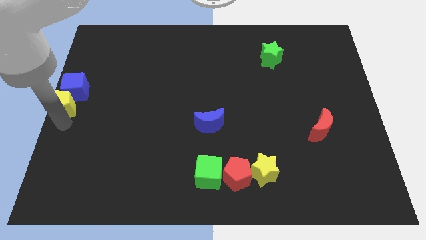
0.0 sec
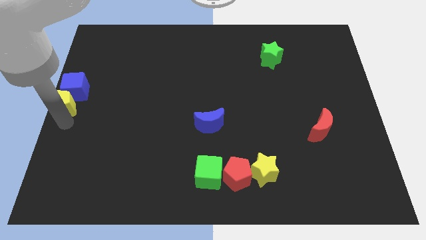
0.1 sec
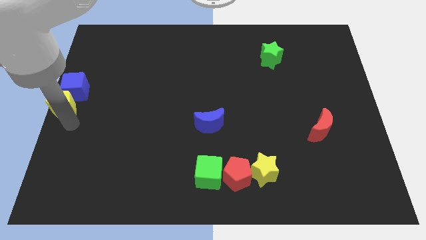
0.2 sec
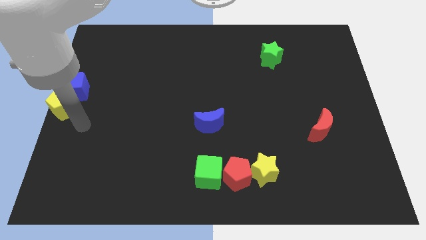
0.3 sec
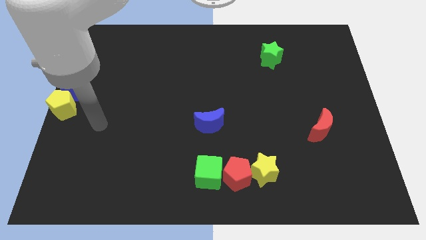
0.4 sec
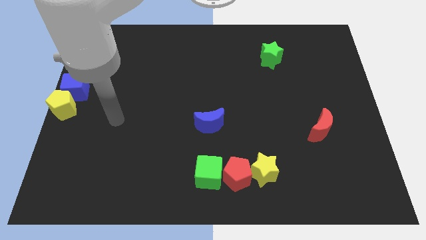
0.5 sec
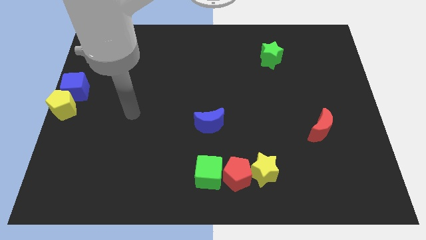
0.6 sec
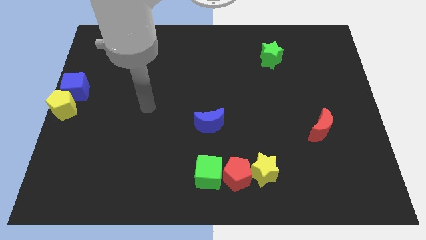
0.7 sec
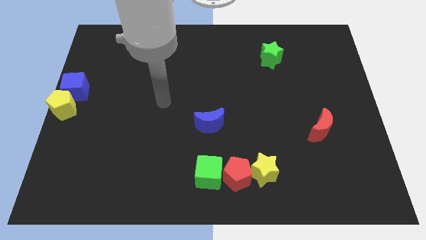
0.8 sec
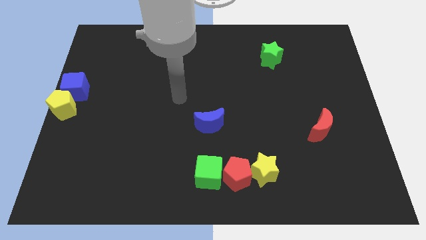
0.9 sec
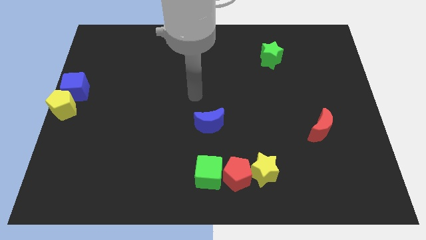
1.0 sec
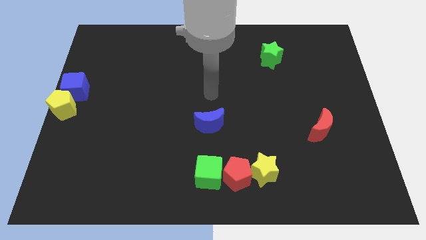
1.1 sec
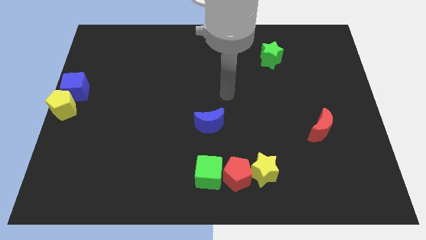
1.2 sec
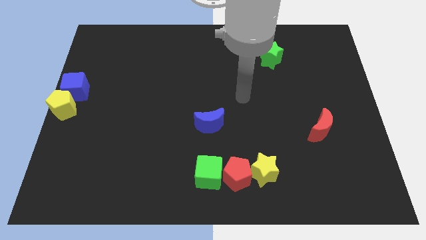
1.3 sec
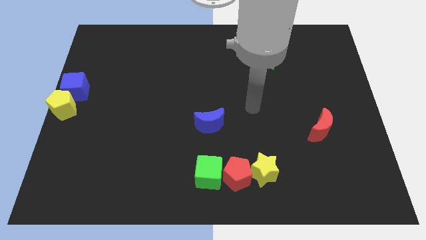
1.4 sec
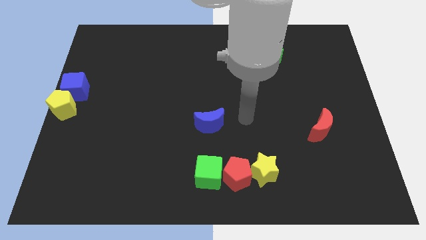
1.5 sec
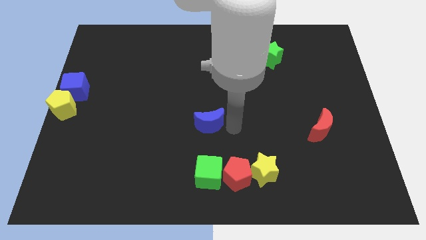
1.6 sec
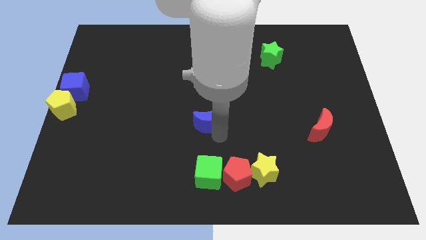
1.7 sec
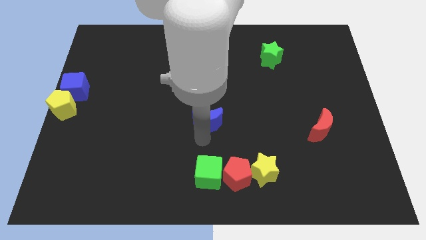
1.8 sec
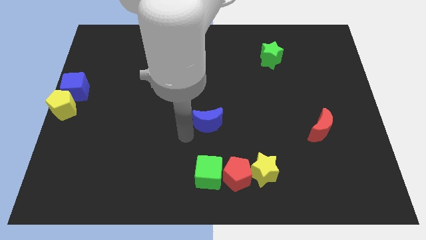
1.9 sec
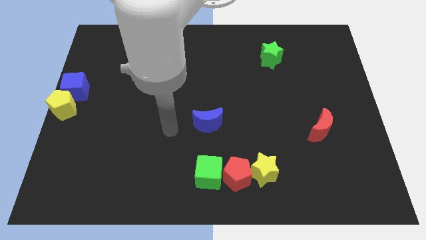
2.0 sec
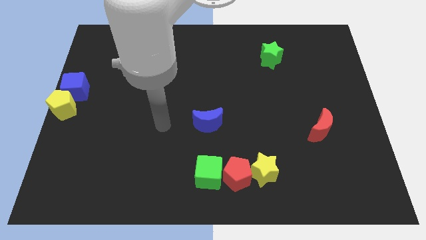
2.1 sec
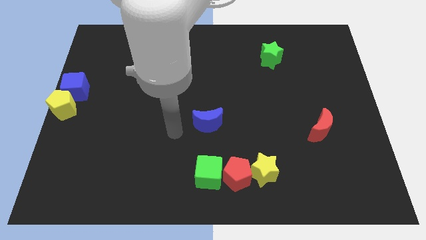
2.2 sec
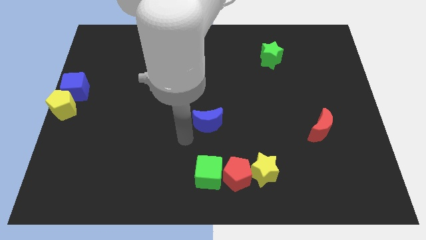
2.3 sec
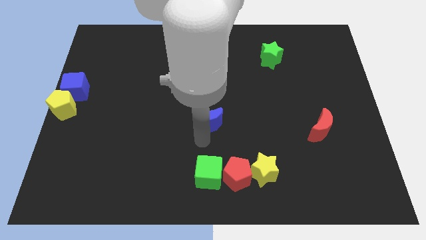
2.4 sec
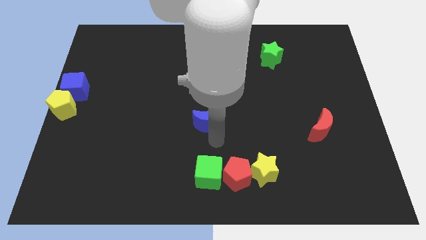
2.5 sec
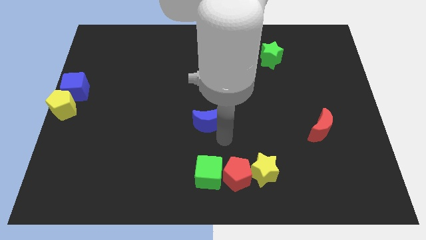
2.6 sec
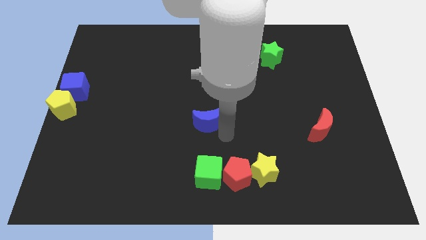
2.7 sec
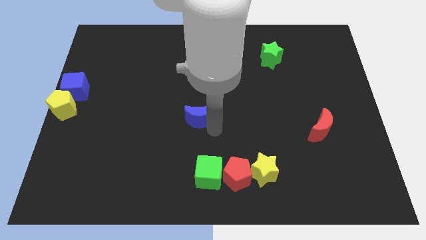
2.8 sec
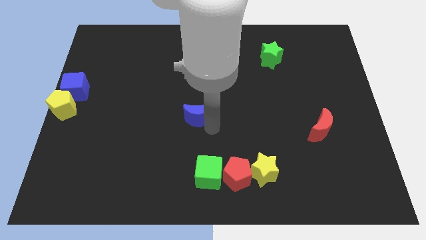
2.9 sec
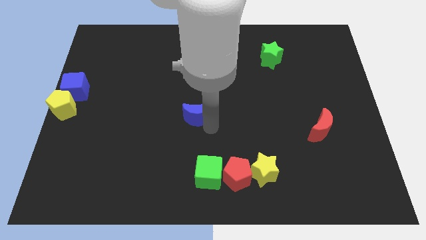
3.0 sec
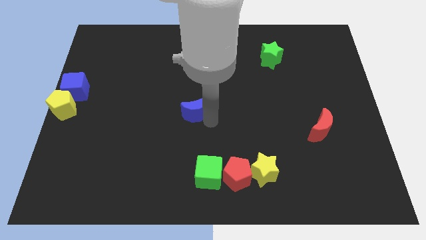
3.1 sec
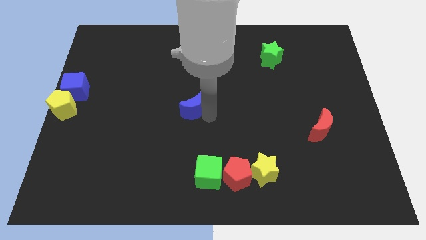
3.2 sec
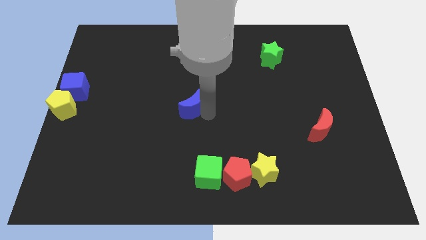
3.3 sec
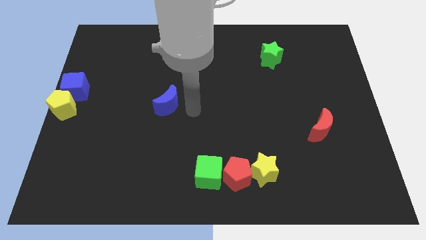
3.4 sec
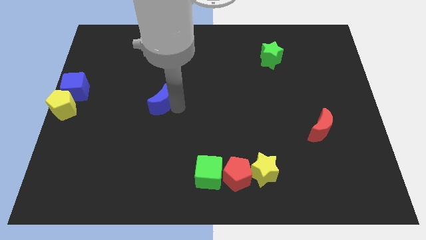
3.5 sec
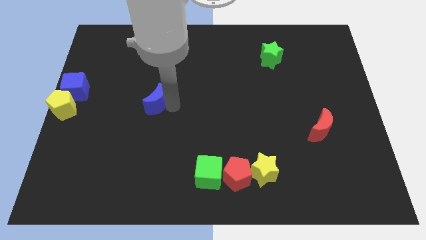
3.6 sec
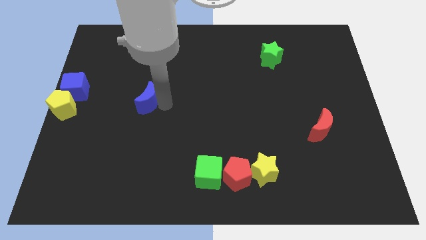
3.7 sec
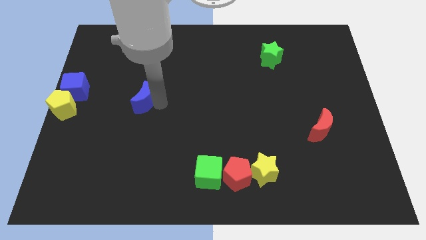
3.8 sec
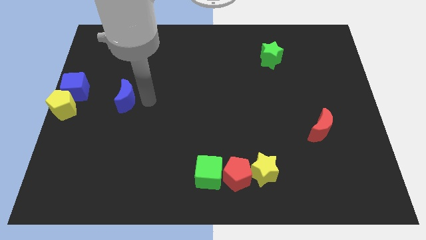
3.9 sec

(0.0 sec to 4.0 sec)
move blue moon to right of blue cube

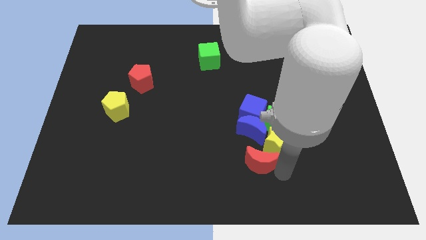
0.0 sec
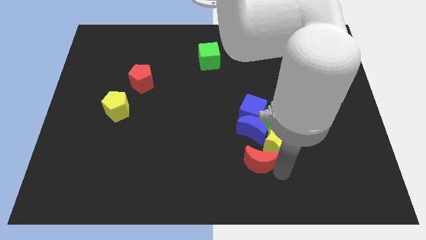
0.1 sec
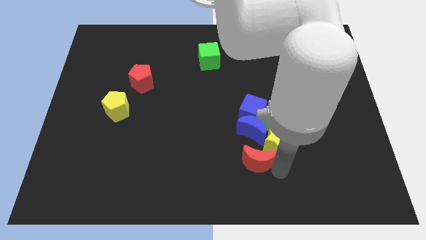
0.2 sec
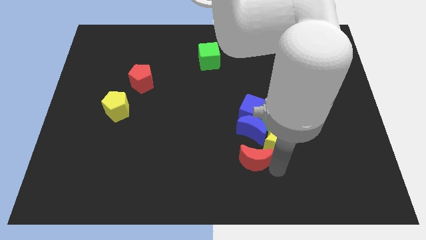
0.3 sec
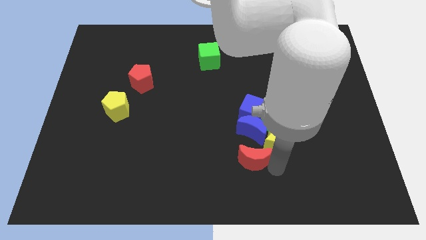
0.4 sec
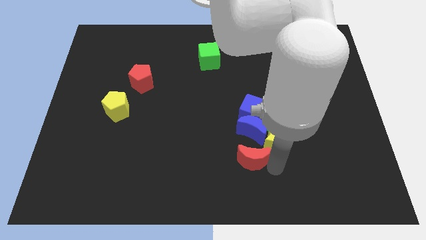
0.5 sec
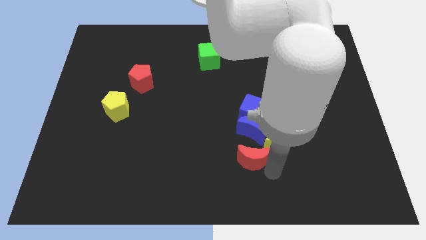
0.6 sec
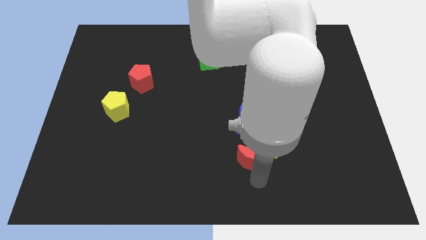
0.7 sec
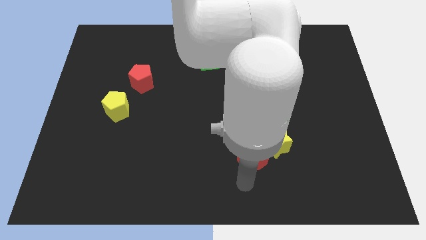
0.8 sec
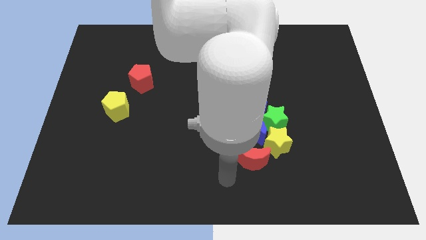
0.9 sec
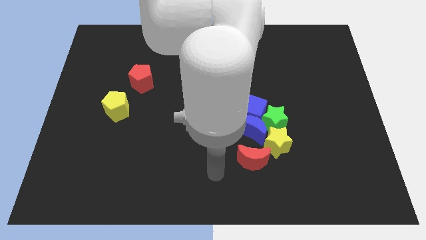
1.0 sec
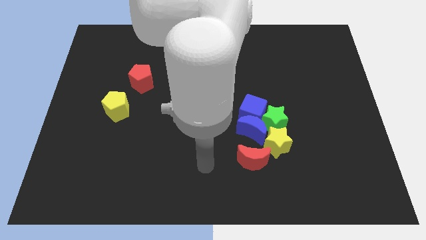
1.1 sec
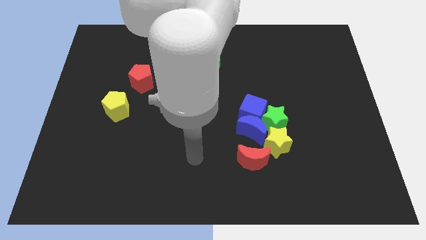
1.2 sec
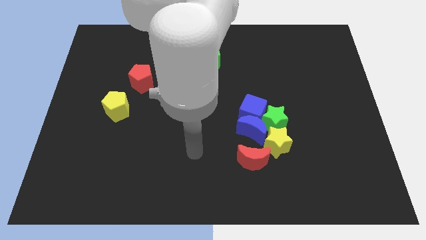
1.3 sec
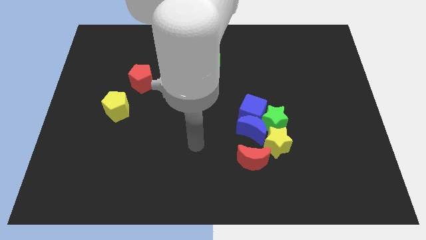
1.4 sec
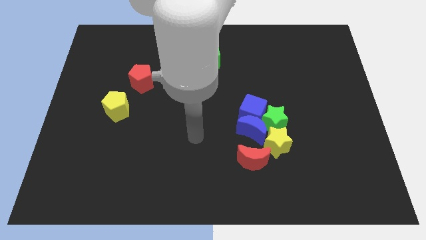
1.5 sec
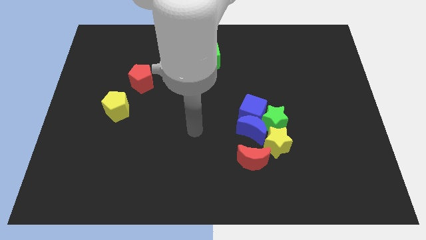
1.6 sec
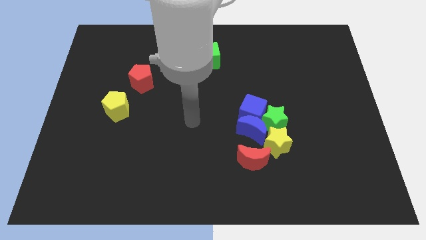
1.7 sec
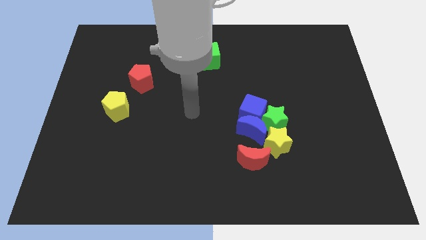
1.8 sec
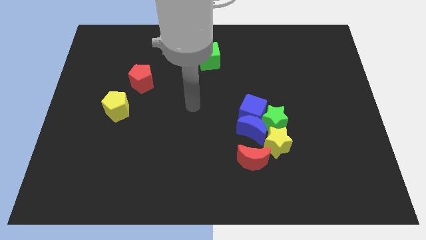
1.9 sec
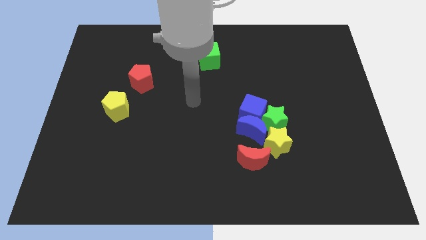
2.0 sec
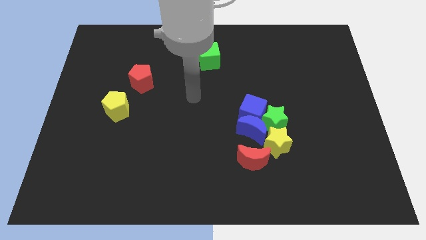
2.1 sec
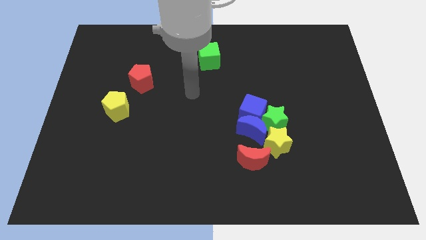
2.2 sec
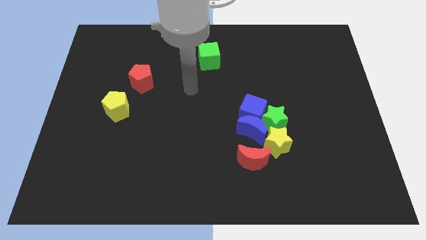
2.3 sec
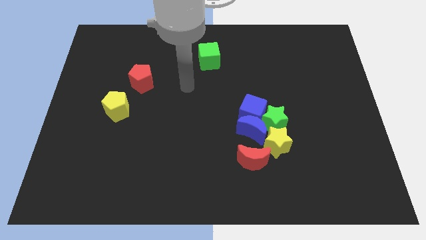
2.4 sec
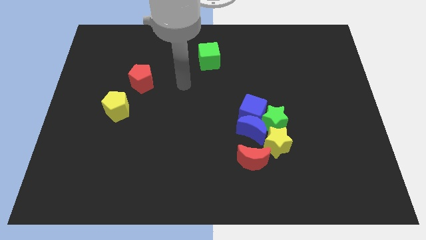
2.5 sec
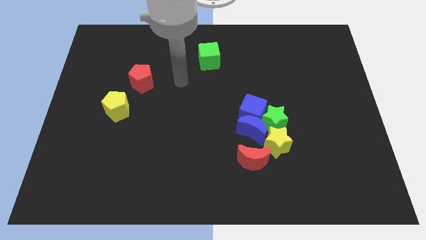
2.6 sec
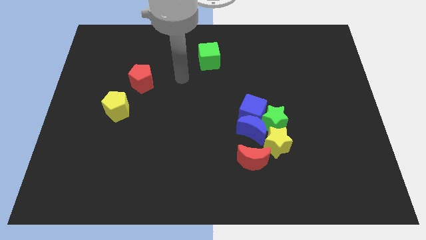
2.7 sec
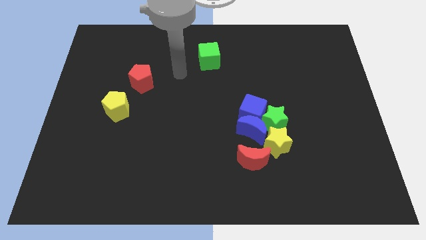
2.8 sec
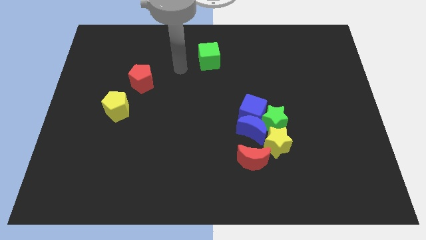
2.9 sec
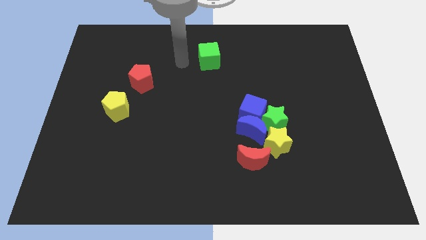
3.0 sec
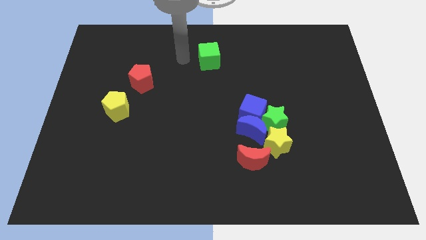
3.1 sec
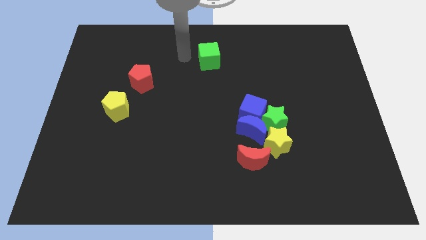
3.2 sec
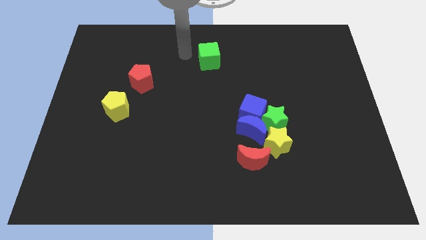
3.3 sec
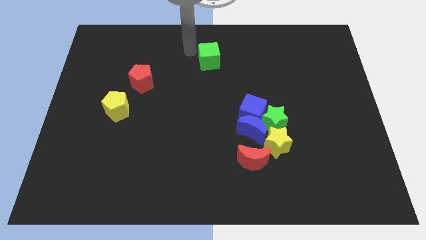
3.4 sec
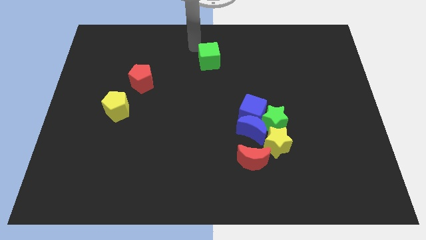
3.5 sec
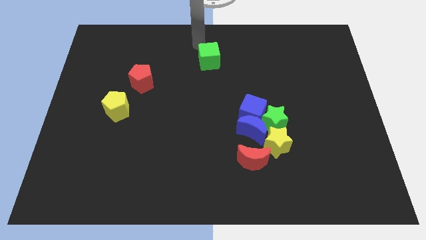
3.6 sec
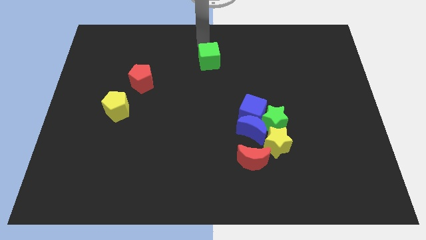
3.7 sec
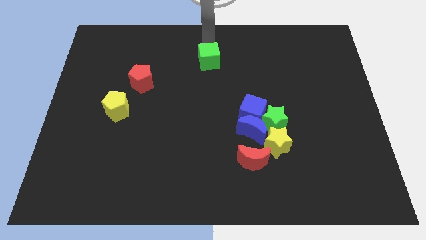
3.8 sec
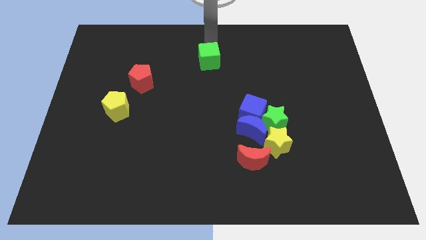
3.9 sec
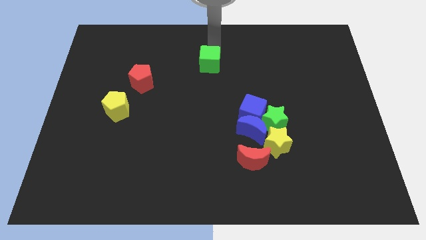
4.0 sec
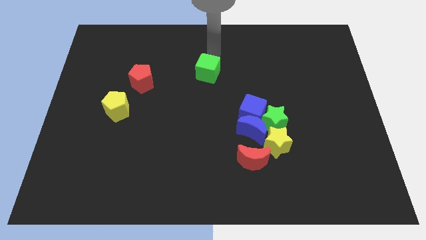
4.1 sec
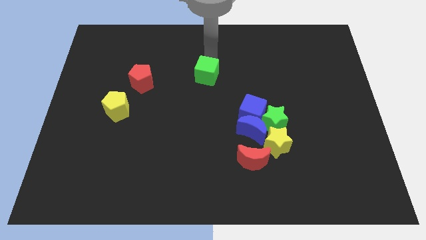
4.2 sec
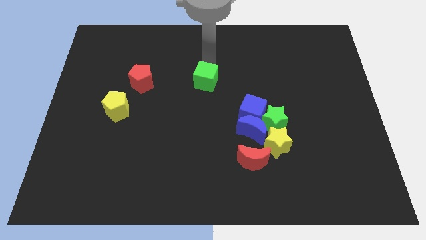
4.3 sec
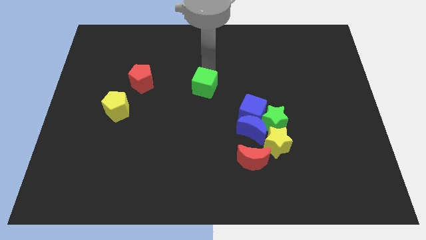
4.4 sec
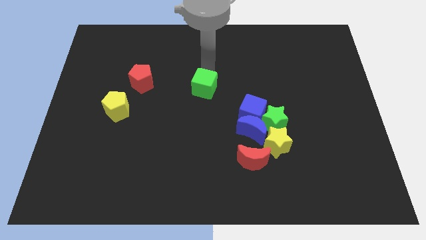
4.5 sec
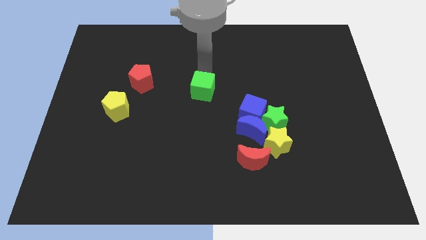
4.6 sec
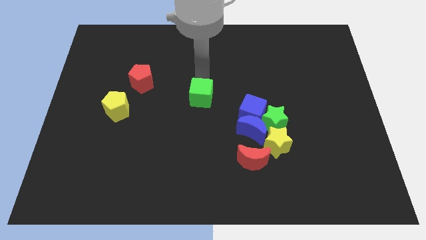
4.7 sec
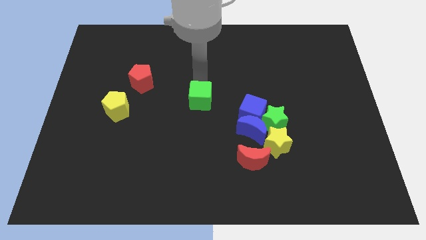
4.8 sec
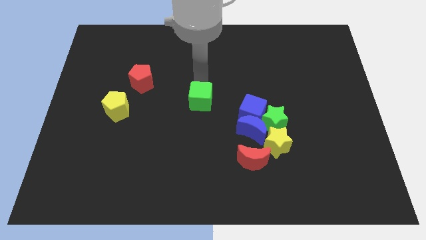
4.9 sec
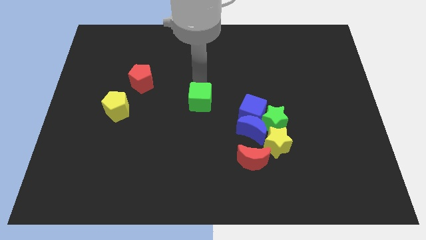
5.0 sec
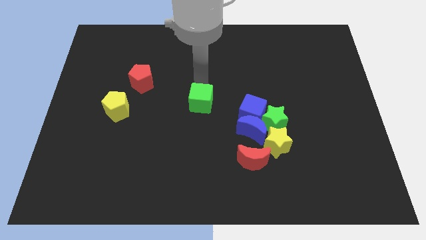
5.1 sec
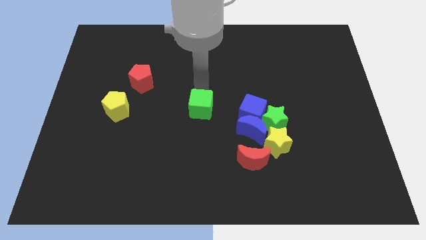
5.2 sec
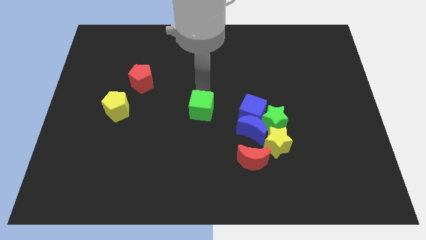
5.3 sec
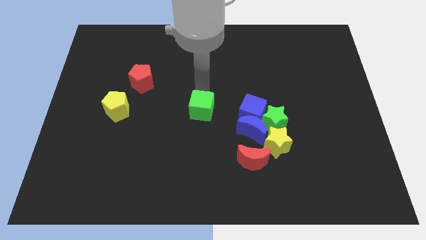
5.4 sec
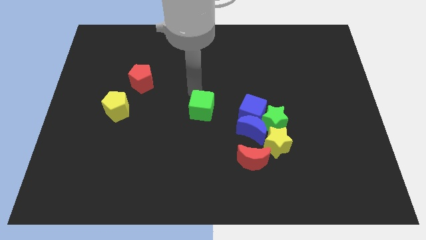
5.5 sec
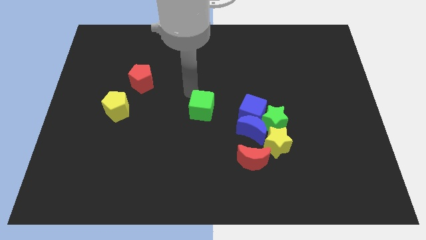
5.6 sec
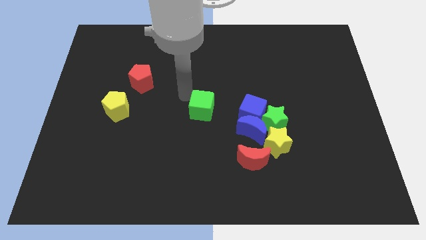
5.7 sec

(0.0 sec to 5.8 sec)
move the green cube to the middle of the board
